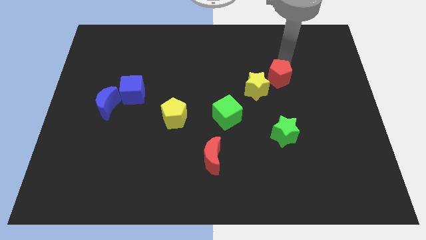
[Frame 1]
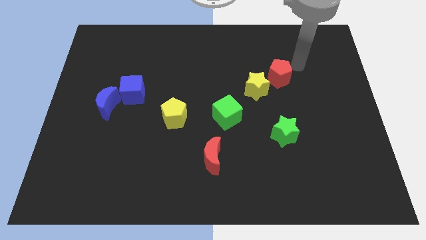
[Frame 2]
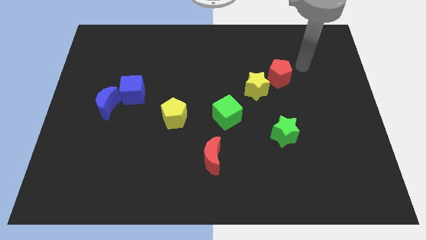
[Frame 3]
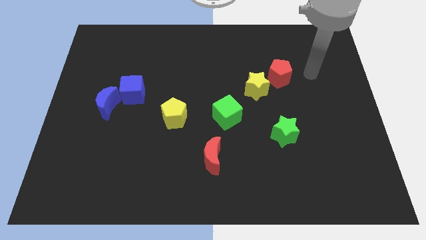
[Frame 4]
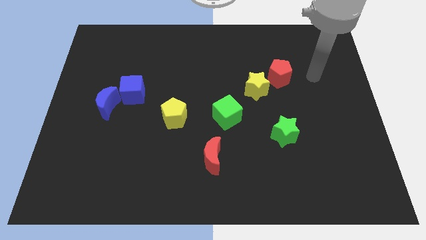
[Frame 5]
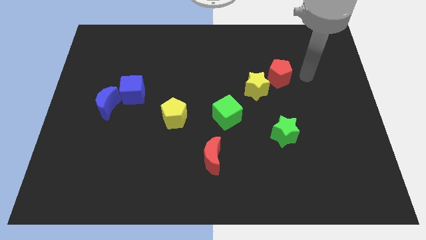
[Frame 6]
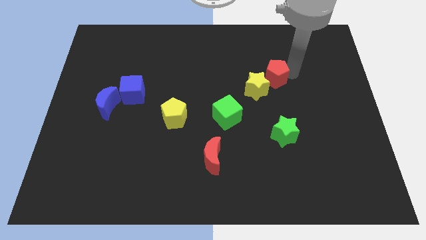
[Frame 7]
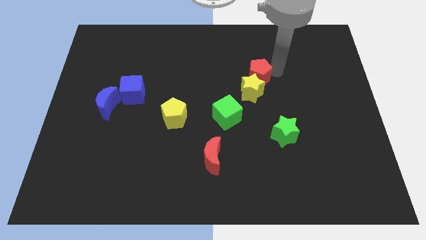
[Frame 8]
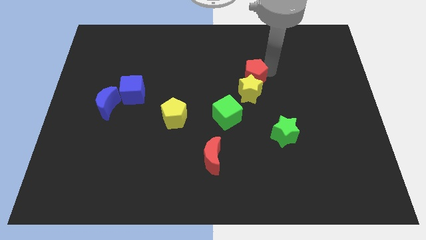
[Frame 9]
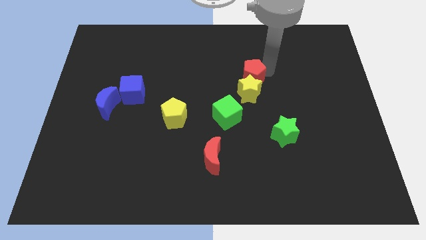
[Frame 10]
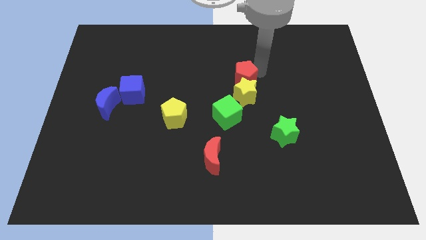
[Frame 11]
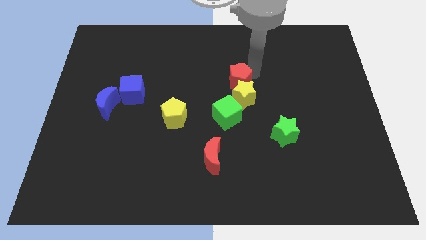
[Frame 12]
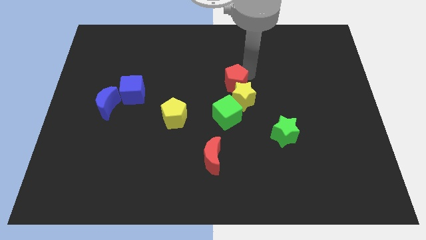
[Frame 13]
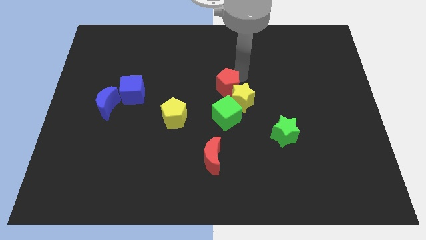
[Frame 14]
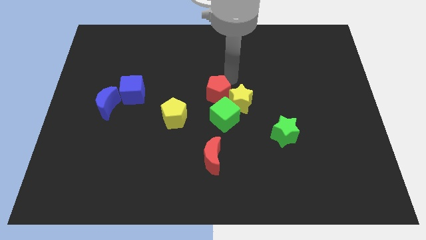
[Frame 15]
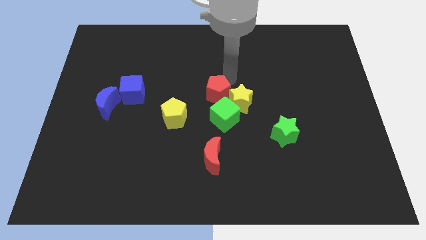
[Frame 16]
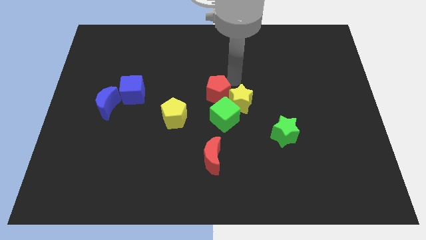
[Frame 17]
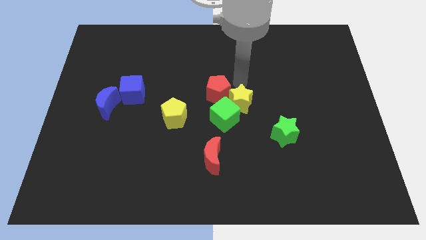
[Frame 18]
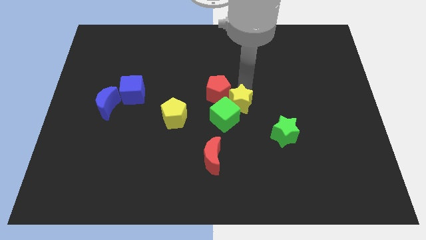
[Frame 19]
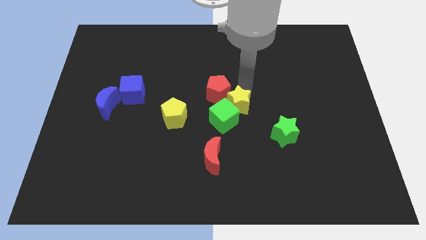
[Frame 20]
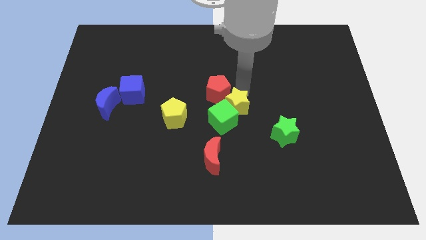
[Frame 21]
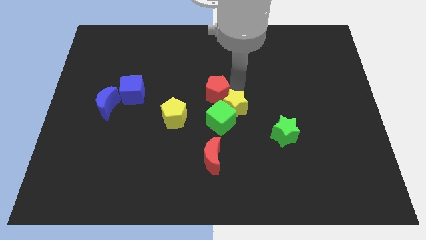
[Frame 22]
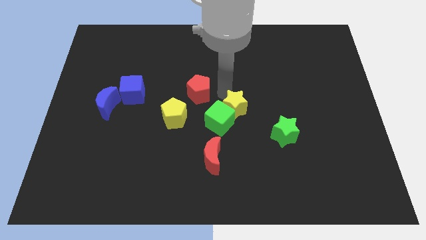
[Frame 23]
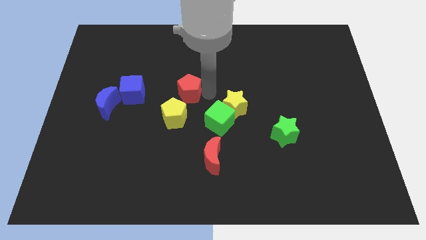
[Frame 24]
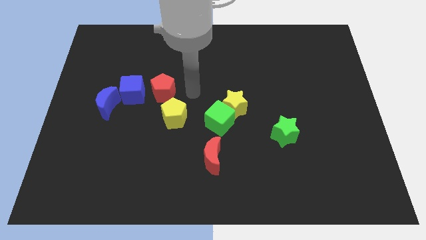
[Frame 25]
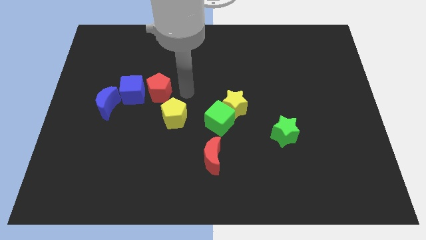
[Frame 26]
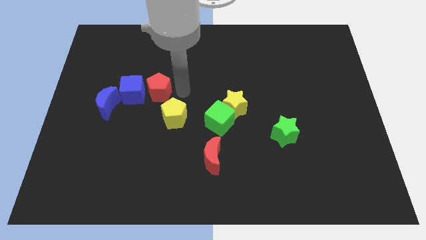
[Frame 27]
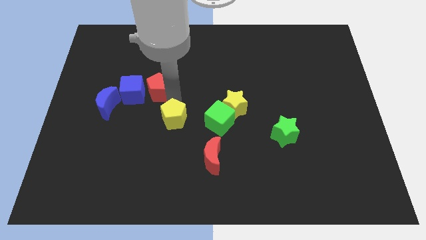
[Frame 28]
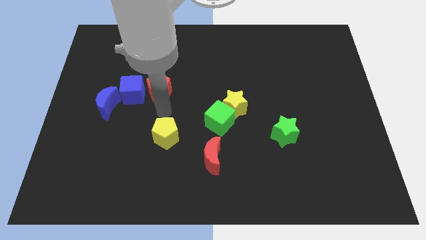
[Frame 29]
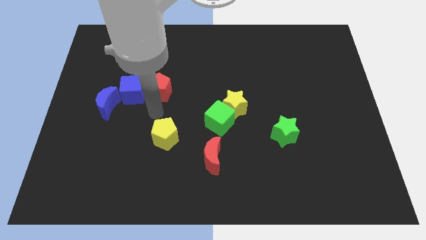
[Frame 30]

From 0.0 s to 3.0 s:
push the red pentagon next to the blue cube

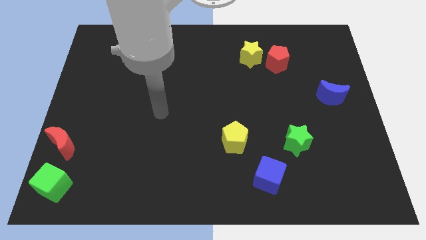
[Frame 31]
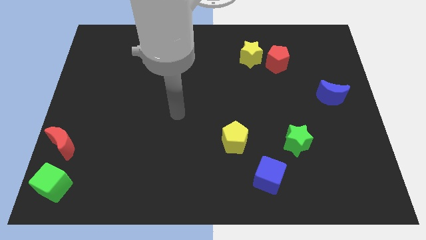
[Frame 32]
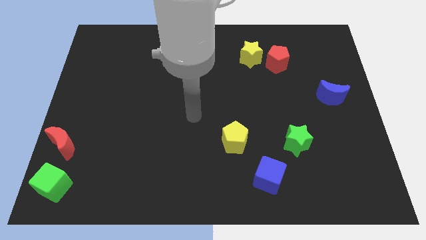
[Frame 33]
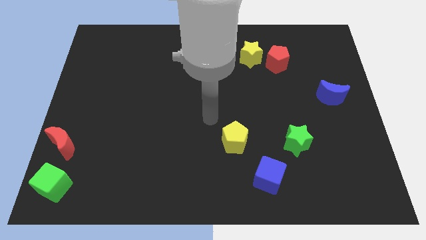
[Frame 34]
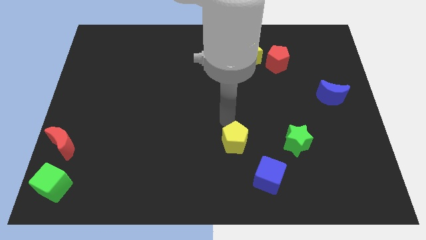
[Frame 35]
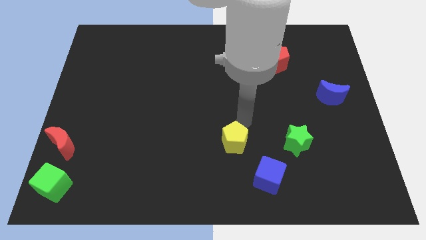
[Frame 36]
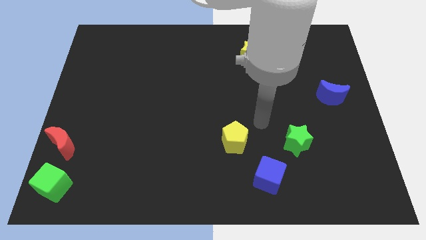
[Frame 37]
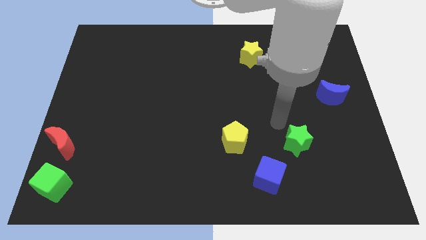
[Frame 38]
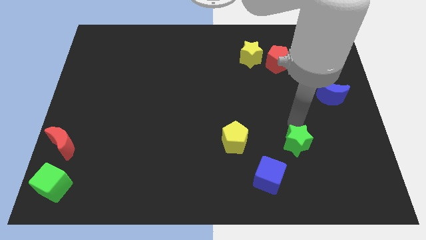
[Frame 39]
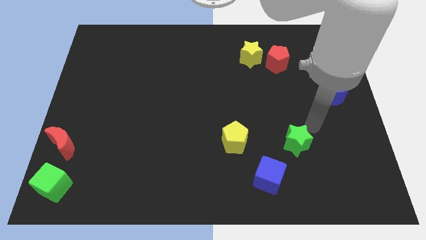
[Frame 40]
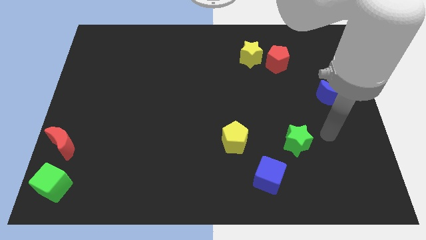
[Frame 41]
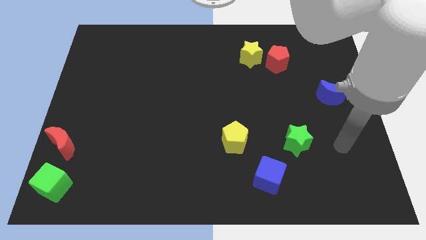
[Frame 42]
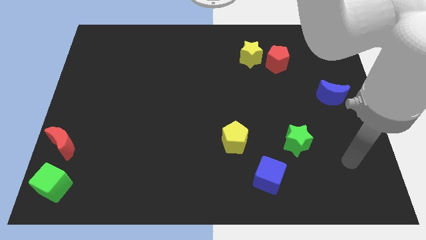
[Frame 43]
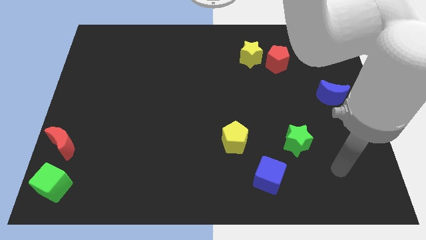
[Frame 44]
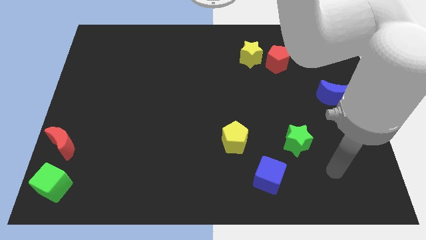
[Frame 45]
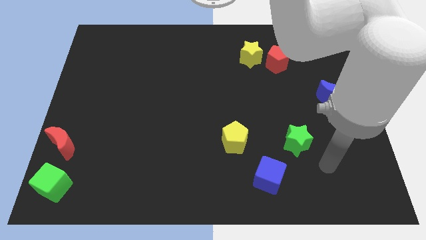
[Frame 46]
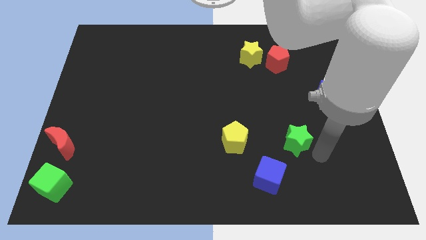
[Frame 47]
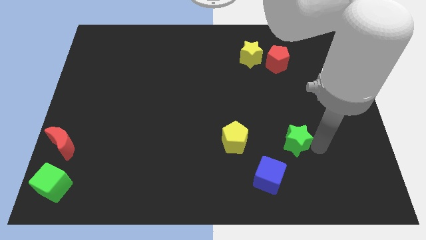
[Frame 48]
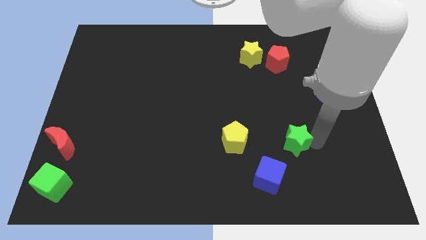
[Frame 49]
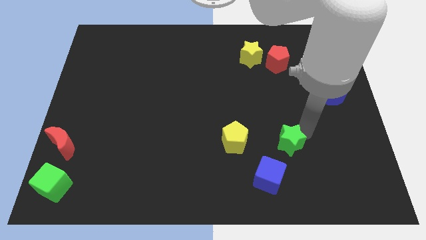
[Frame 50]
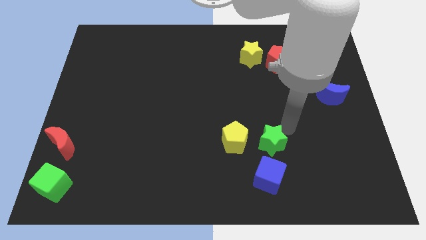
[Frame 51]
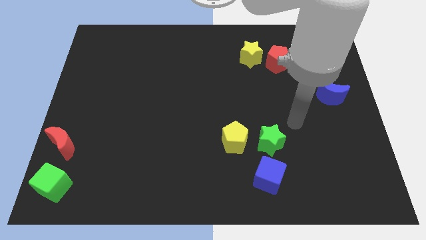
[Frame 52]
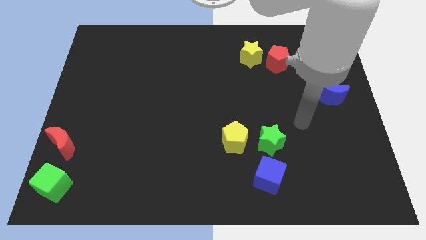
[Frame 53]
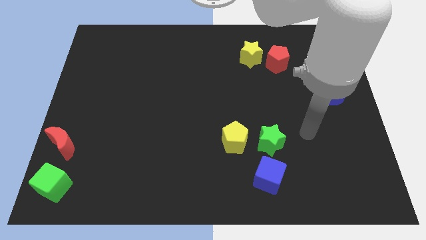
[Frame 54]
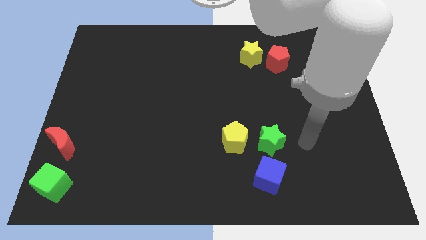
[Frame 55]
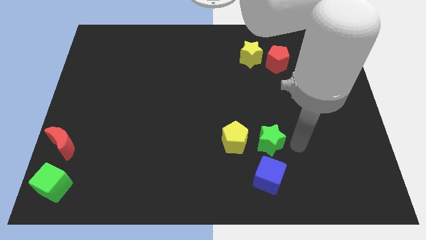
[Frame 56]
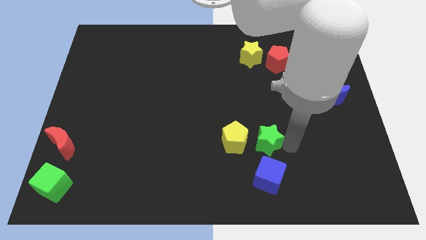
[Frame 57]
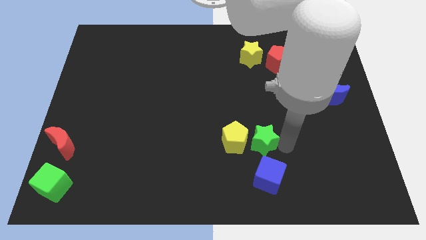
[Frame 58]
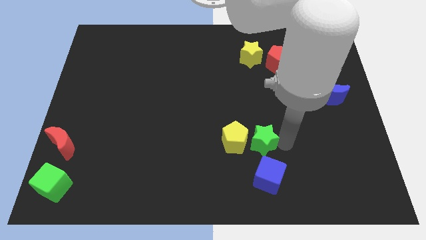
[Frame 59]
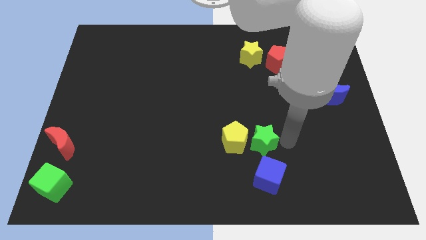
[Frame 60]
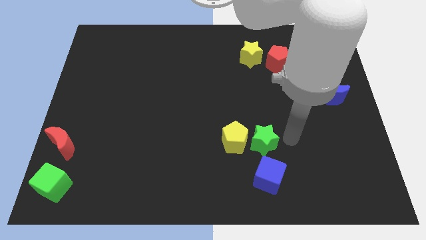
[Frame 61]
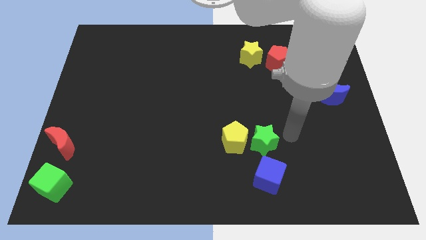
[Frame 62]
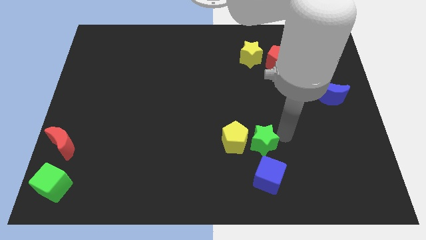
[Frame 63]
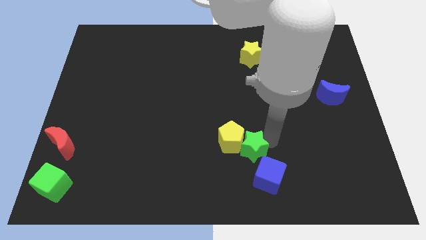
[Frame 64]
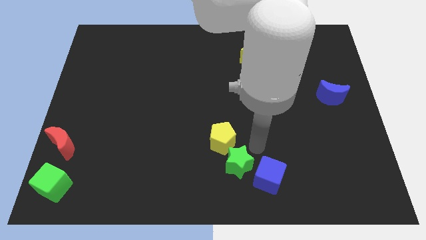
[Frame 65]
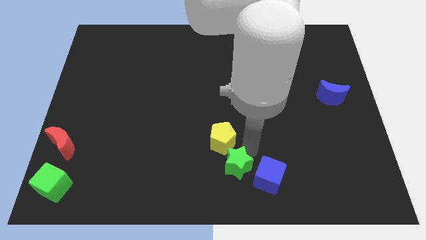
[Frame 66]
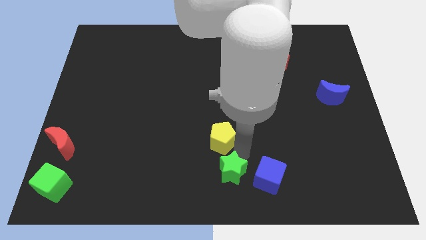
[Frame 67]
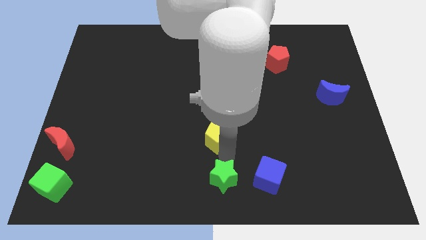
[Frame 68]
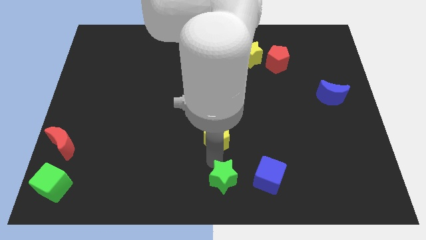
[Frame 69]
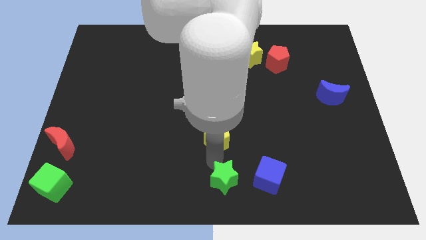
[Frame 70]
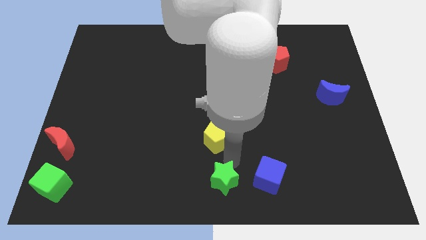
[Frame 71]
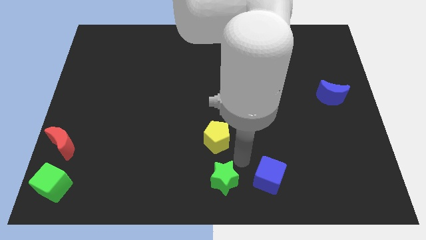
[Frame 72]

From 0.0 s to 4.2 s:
place the green star below the yellow pentagon

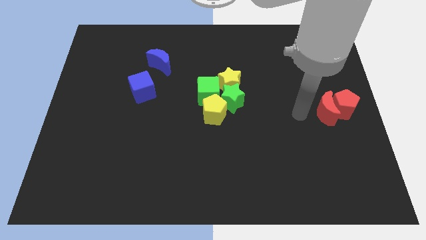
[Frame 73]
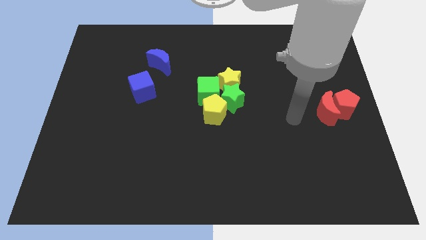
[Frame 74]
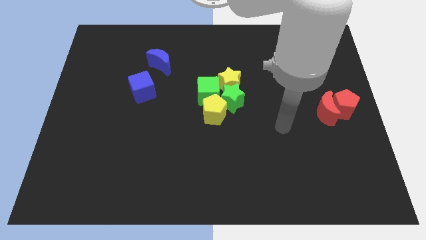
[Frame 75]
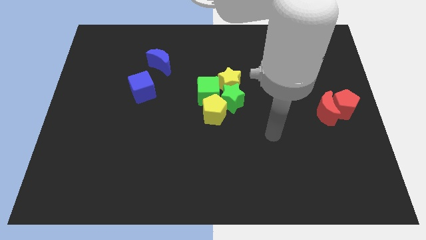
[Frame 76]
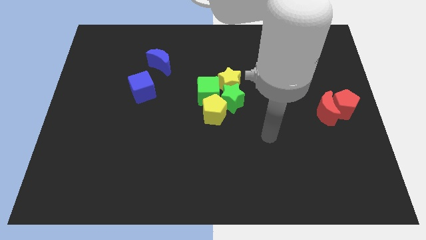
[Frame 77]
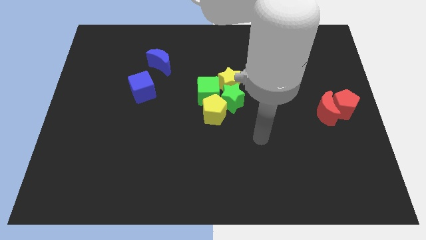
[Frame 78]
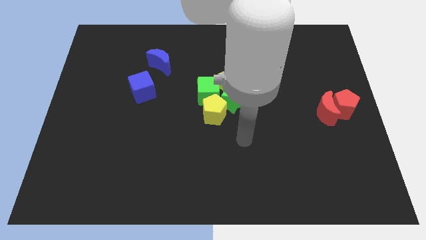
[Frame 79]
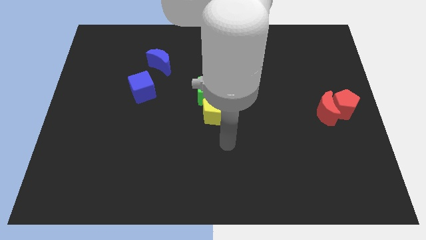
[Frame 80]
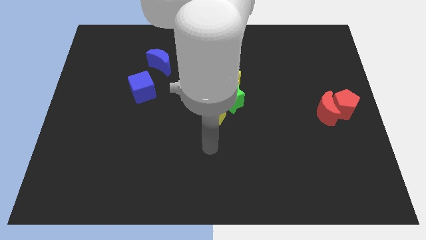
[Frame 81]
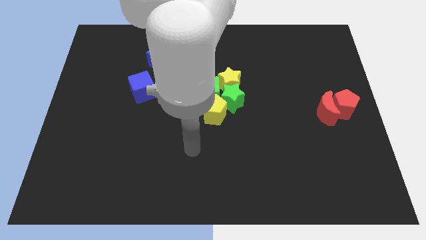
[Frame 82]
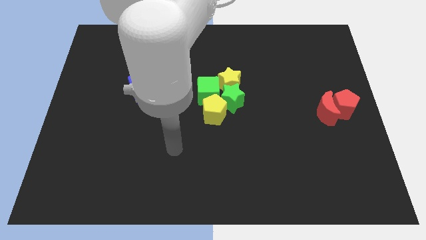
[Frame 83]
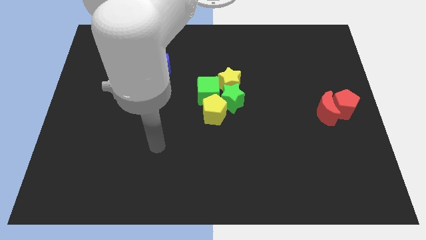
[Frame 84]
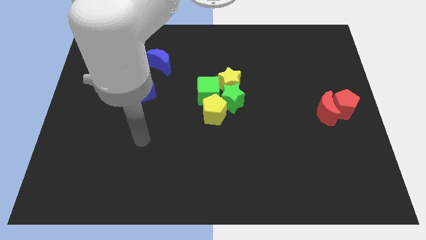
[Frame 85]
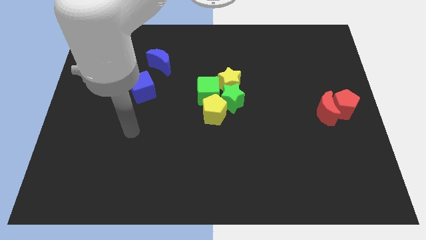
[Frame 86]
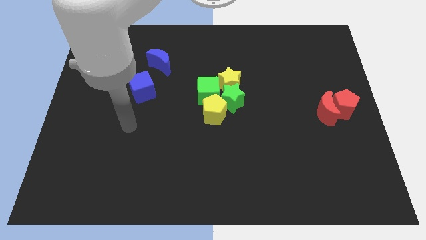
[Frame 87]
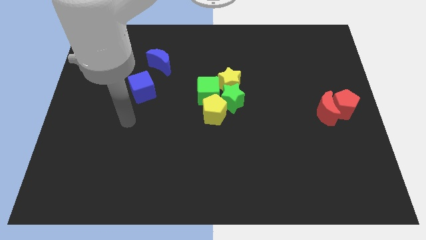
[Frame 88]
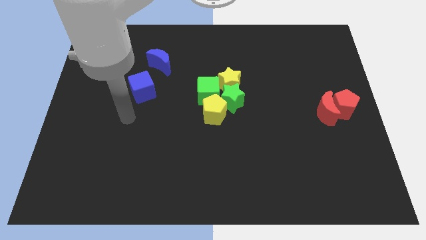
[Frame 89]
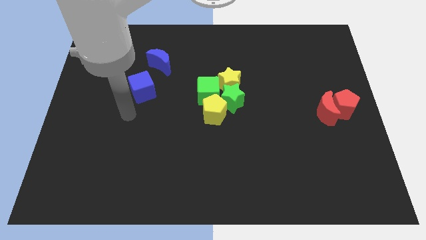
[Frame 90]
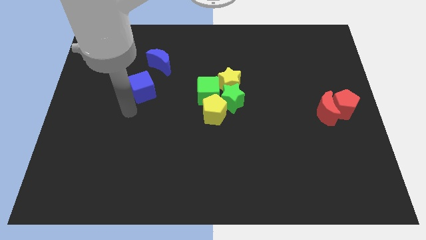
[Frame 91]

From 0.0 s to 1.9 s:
place your arm at the bottom of the blue cube
